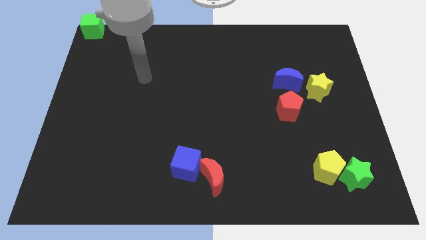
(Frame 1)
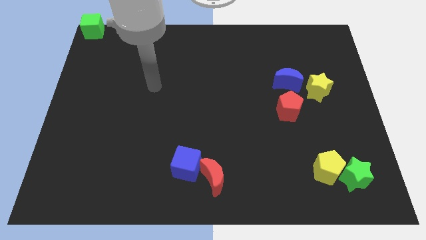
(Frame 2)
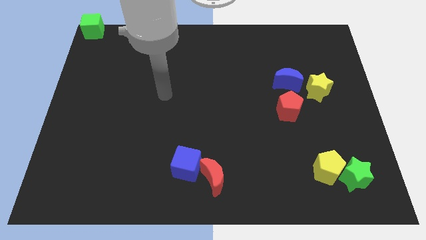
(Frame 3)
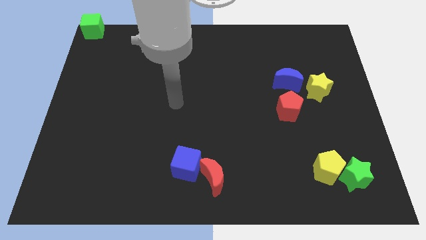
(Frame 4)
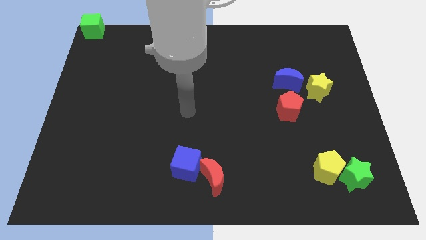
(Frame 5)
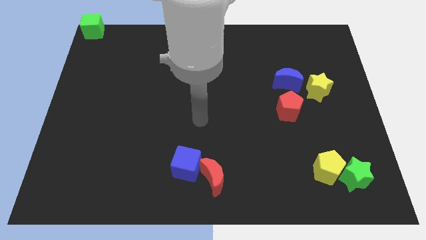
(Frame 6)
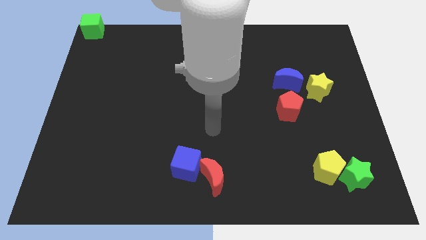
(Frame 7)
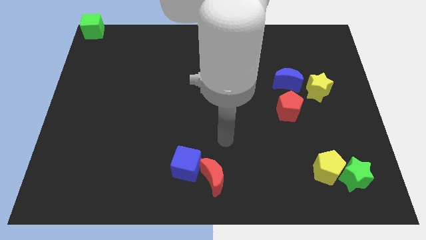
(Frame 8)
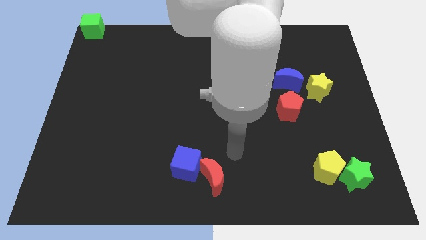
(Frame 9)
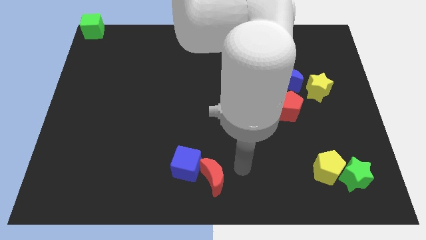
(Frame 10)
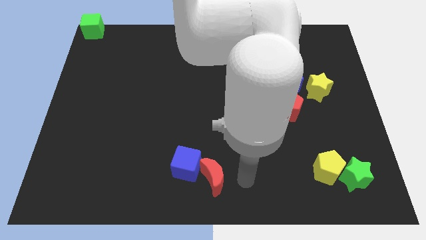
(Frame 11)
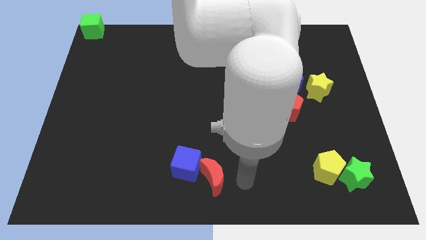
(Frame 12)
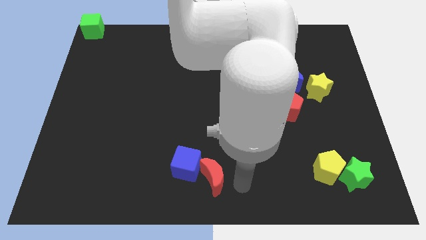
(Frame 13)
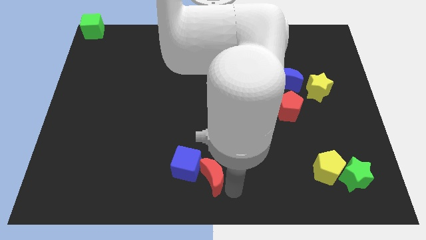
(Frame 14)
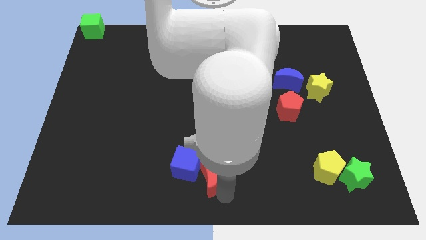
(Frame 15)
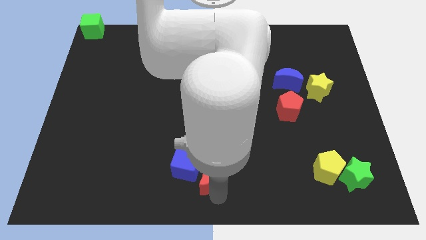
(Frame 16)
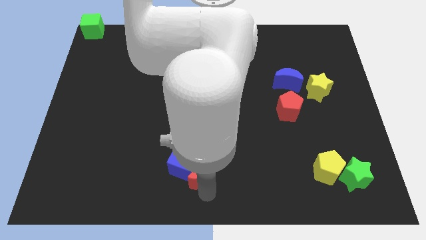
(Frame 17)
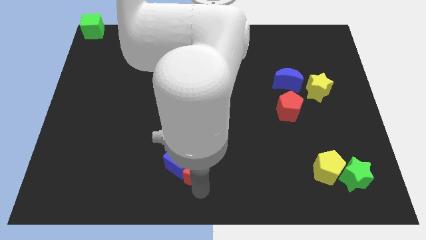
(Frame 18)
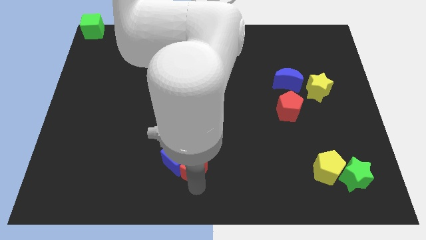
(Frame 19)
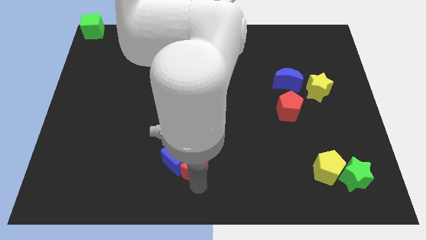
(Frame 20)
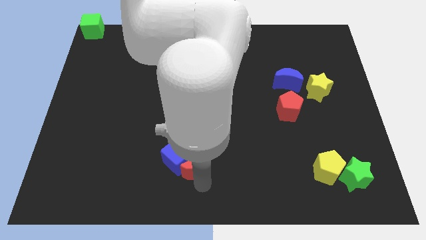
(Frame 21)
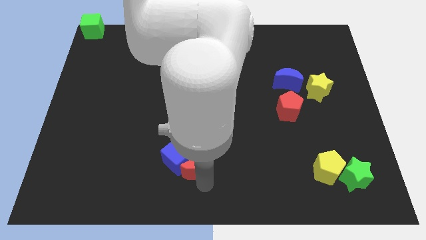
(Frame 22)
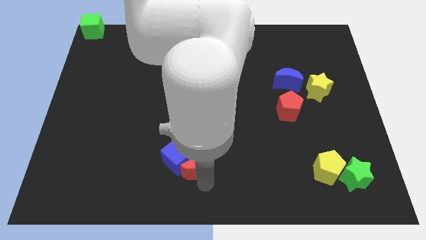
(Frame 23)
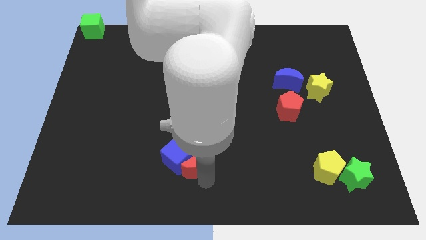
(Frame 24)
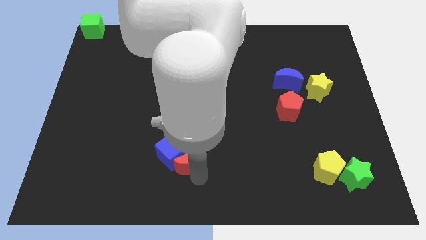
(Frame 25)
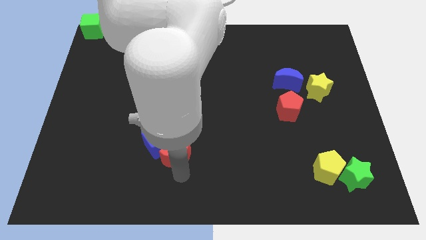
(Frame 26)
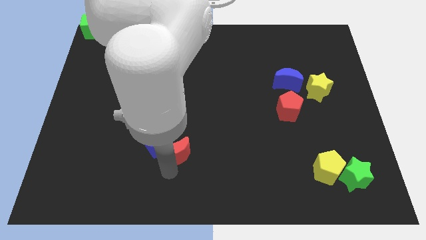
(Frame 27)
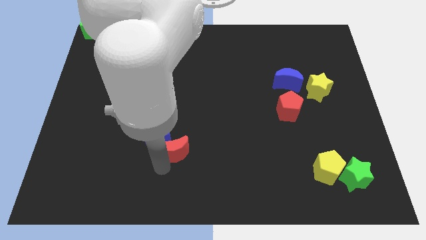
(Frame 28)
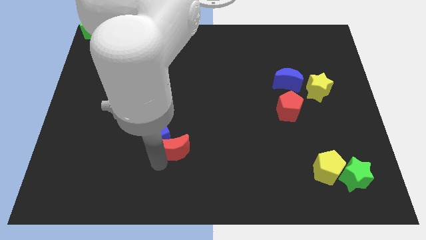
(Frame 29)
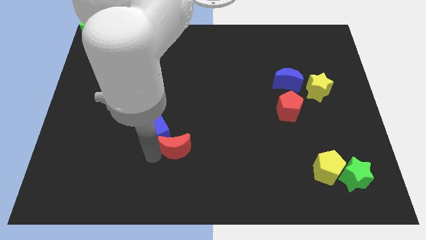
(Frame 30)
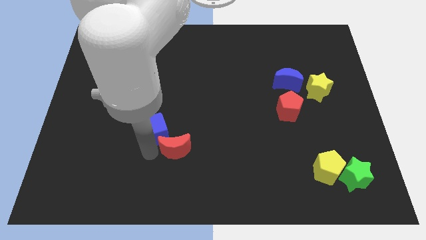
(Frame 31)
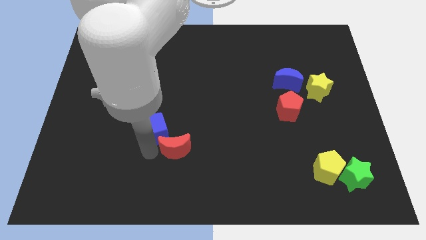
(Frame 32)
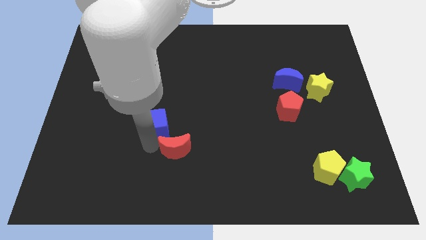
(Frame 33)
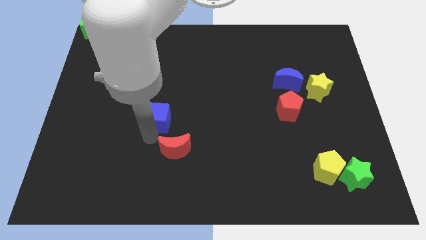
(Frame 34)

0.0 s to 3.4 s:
move the red moon upwards slightly

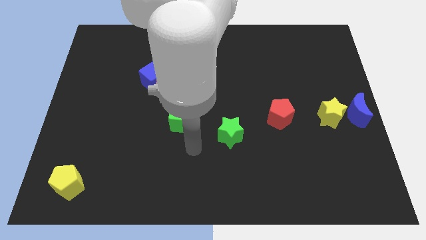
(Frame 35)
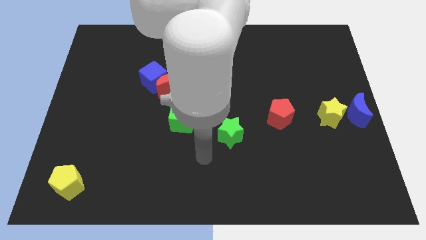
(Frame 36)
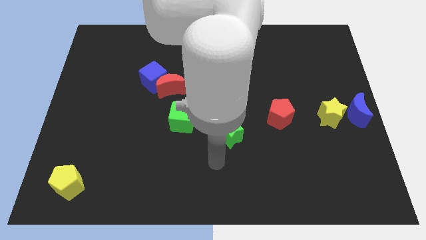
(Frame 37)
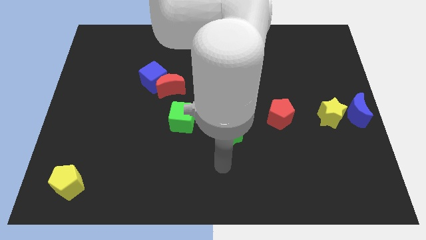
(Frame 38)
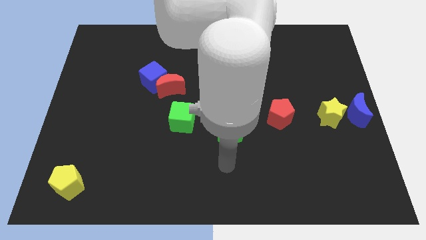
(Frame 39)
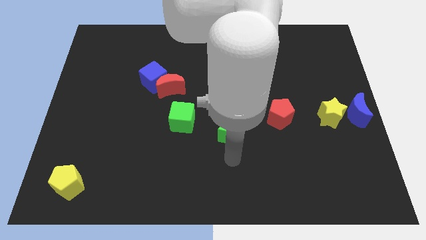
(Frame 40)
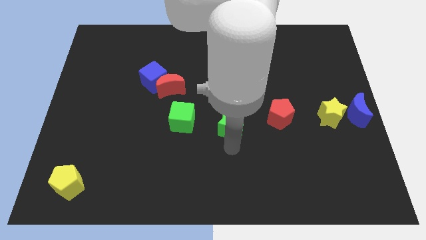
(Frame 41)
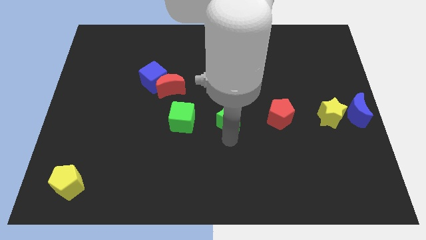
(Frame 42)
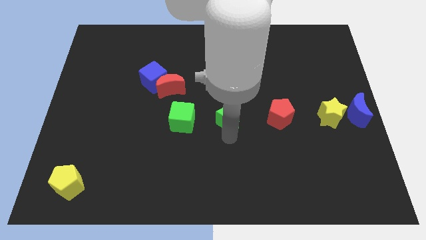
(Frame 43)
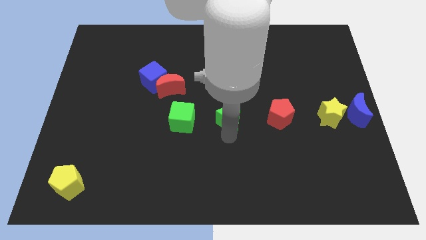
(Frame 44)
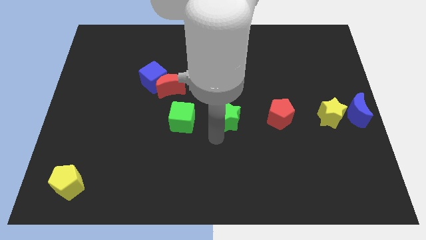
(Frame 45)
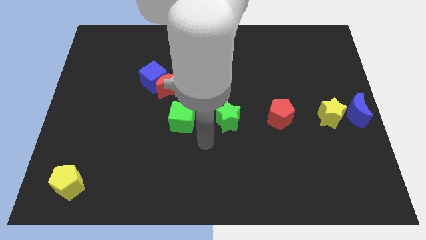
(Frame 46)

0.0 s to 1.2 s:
move the green star in between the green cube and the red pentagon

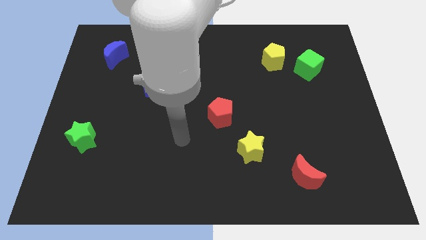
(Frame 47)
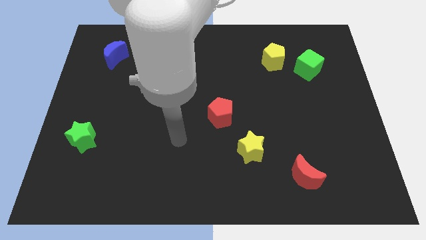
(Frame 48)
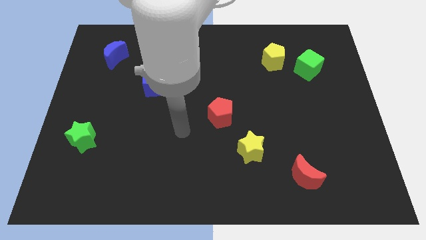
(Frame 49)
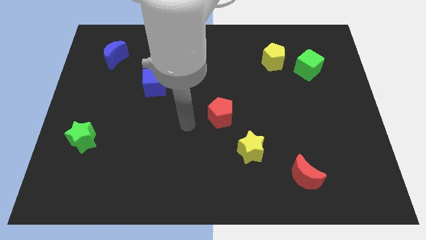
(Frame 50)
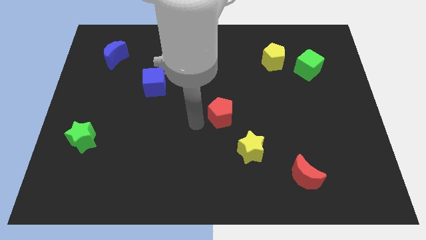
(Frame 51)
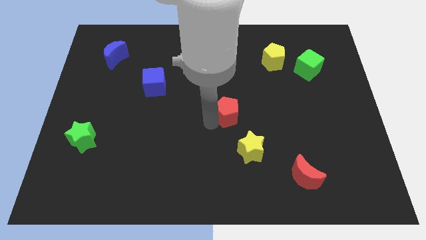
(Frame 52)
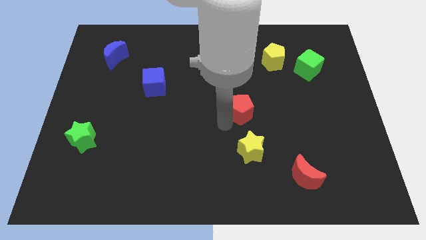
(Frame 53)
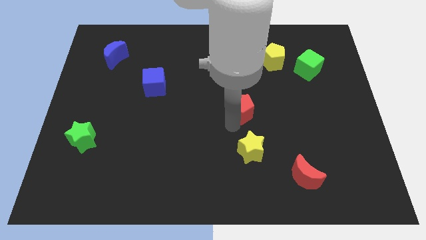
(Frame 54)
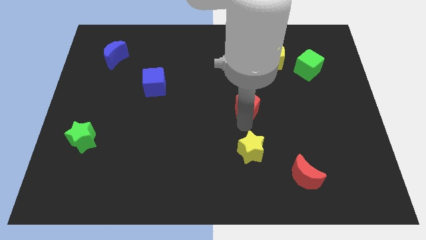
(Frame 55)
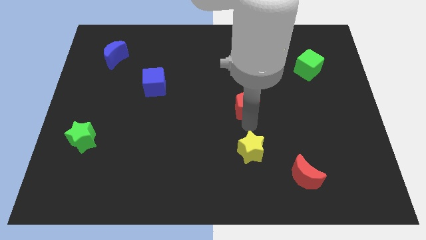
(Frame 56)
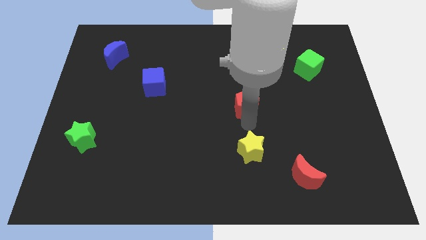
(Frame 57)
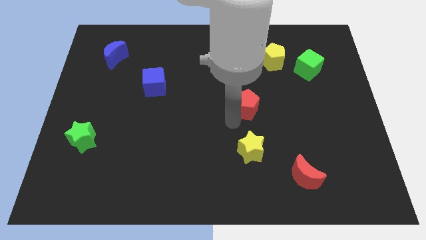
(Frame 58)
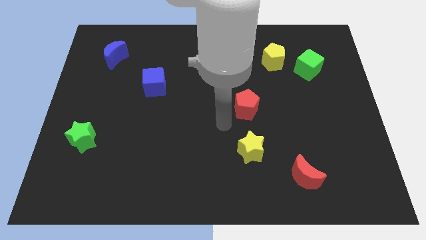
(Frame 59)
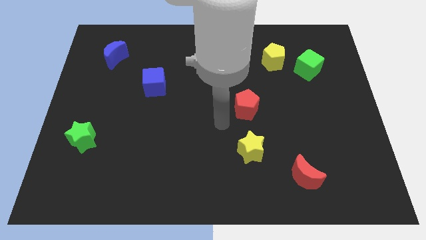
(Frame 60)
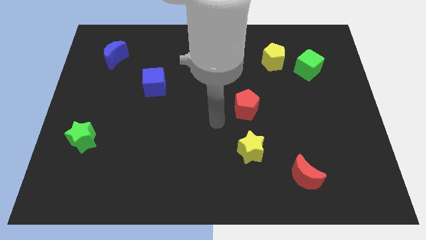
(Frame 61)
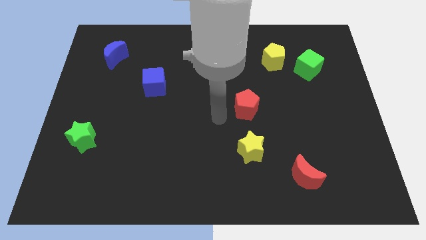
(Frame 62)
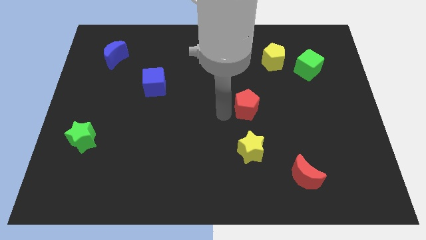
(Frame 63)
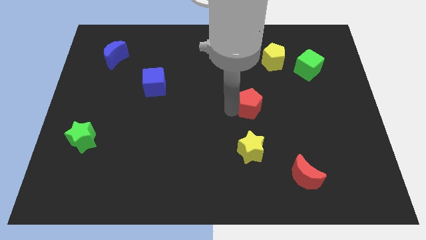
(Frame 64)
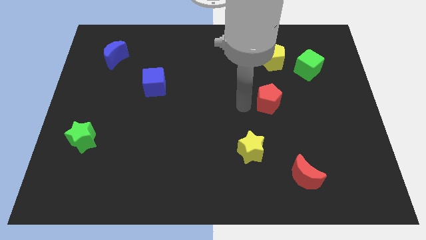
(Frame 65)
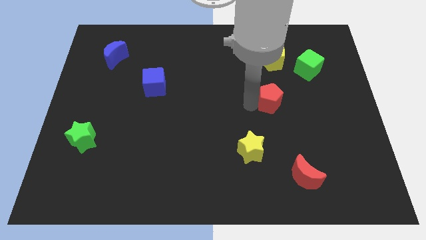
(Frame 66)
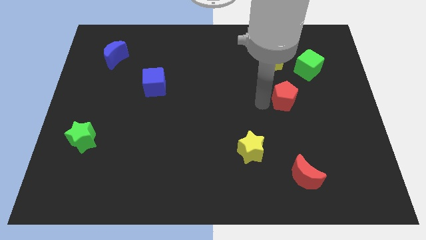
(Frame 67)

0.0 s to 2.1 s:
place the red pentagon in between the yellow blocks

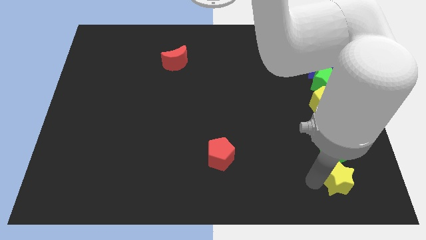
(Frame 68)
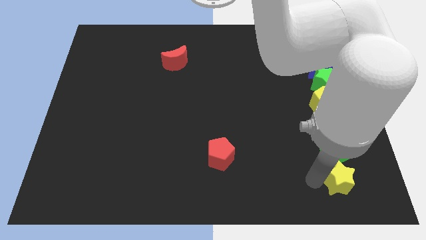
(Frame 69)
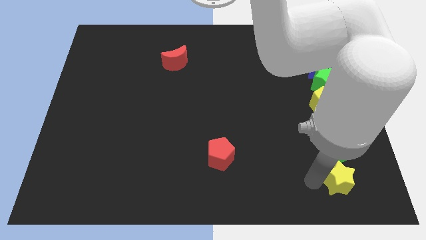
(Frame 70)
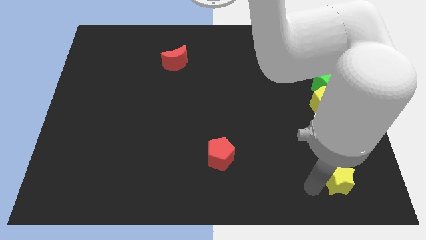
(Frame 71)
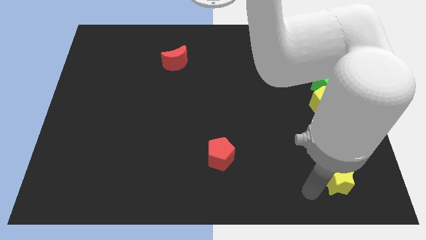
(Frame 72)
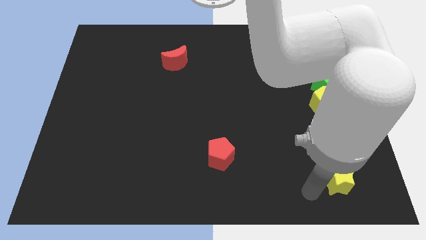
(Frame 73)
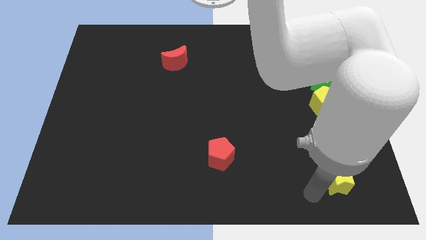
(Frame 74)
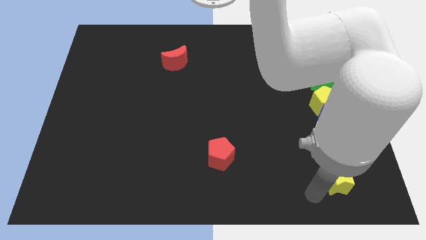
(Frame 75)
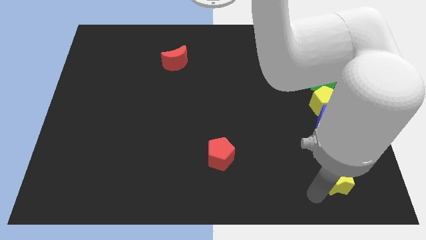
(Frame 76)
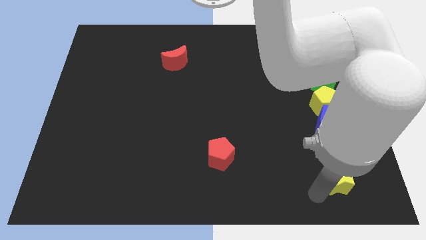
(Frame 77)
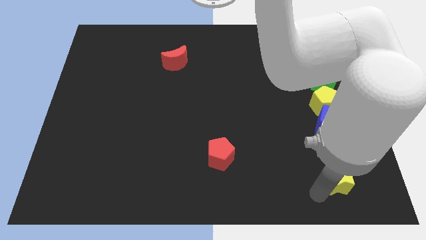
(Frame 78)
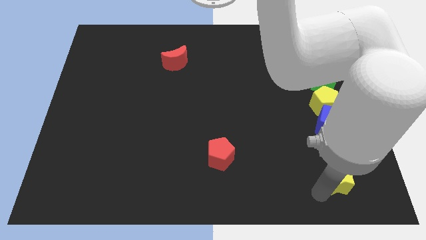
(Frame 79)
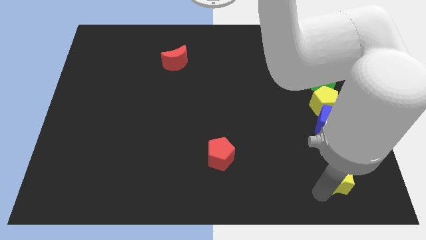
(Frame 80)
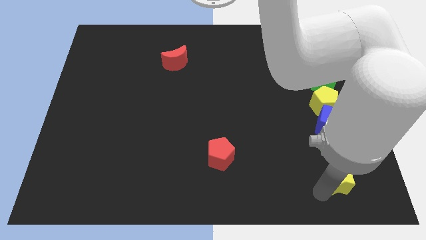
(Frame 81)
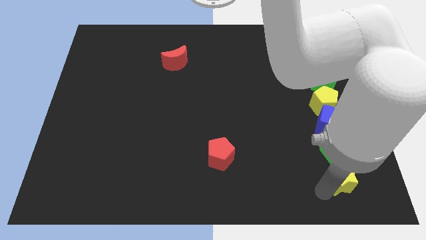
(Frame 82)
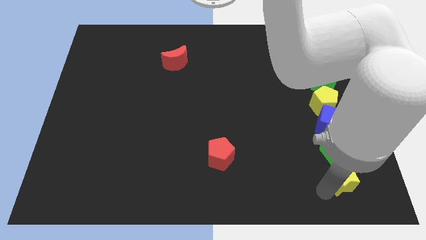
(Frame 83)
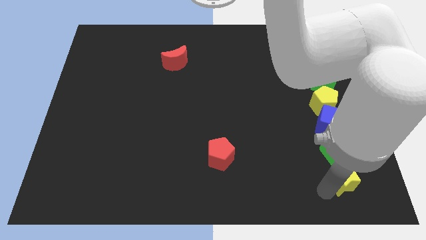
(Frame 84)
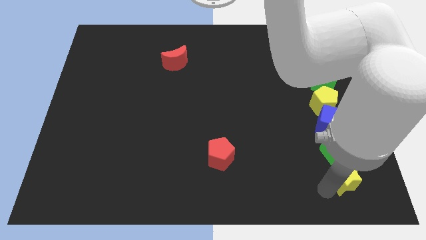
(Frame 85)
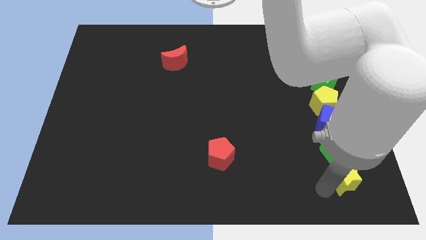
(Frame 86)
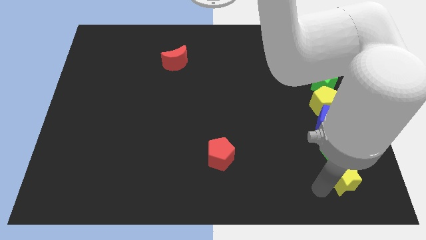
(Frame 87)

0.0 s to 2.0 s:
move the yellow star at the bottom of the green cube

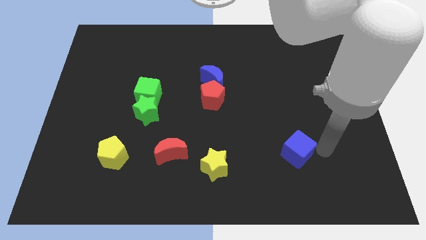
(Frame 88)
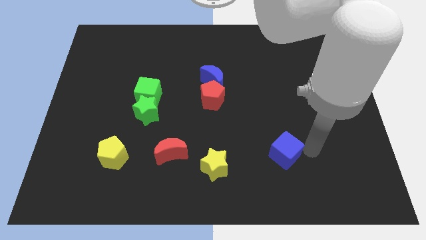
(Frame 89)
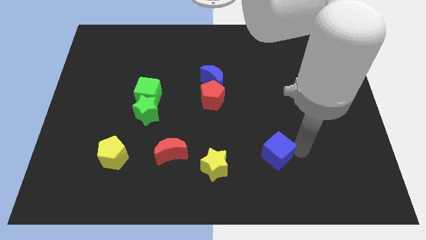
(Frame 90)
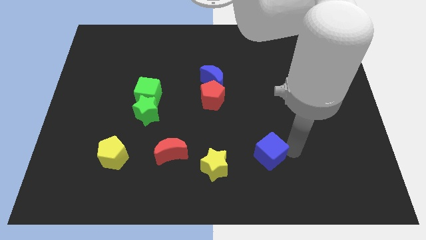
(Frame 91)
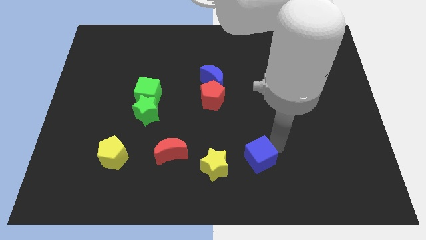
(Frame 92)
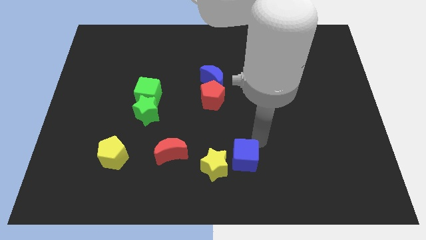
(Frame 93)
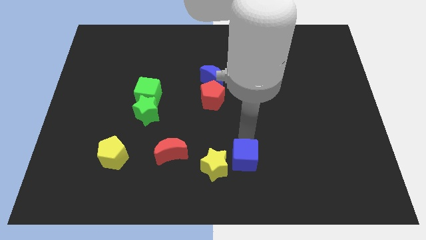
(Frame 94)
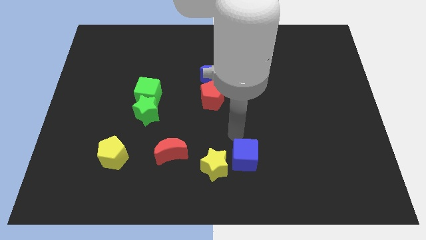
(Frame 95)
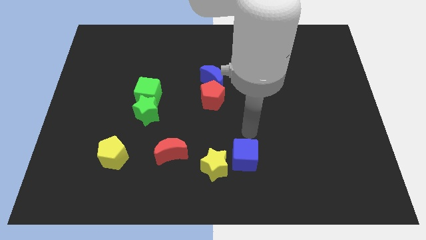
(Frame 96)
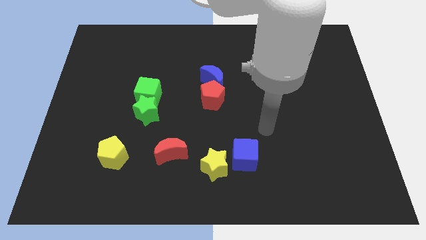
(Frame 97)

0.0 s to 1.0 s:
push the blue cube to the right of yellow star
